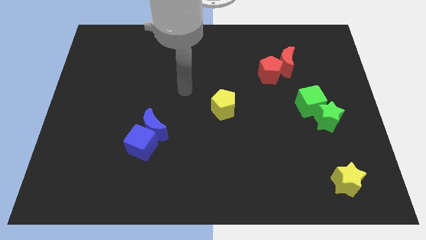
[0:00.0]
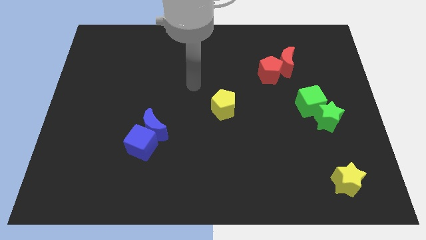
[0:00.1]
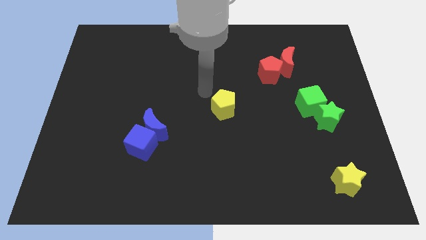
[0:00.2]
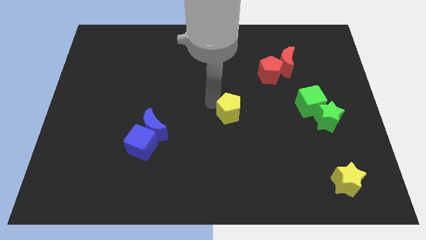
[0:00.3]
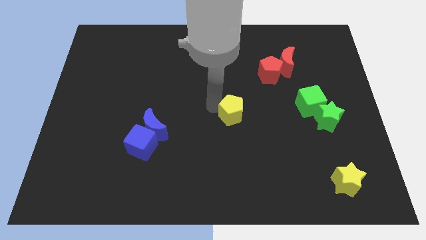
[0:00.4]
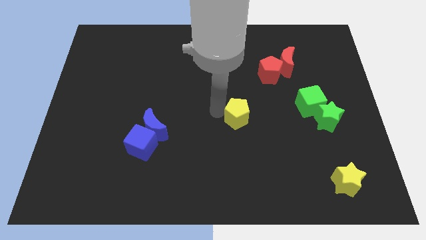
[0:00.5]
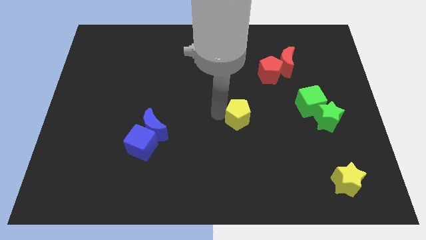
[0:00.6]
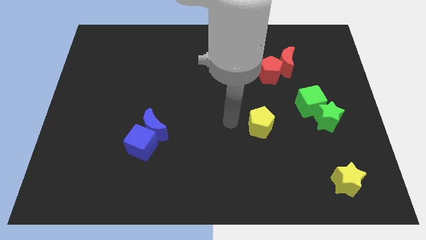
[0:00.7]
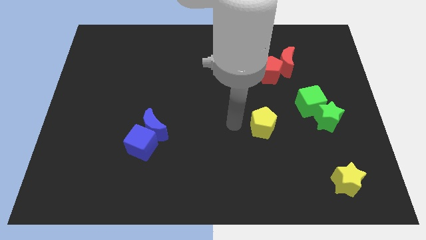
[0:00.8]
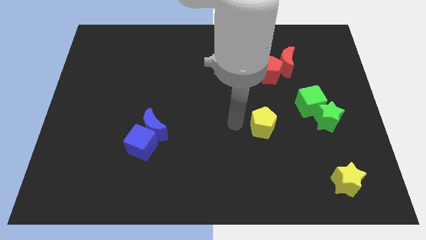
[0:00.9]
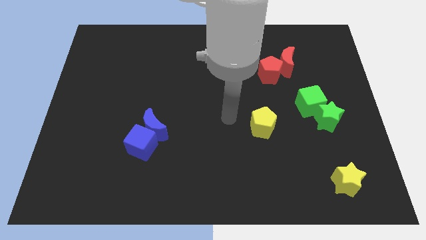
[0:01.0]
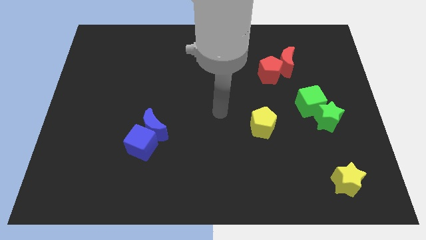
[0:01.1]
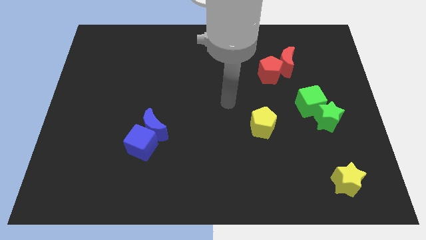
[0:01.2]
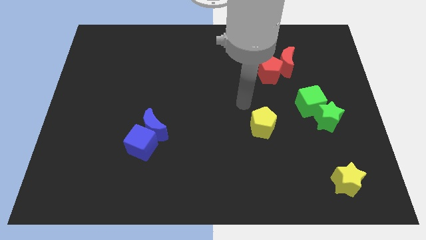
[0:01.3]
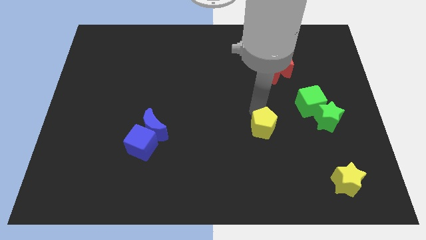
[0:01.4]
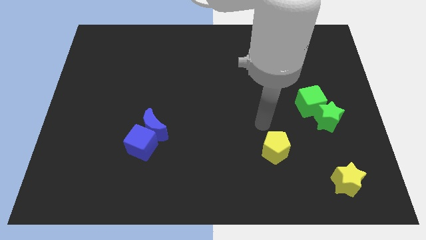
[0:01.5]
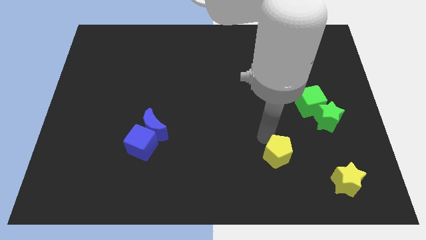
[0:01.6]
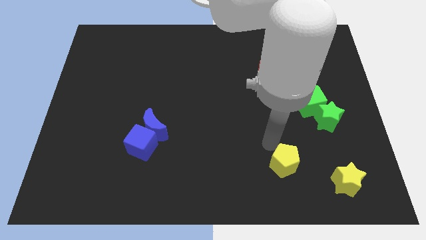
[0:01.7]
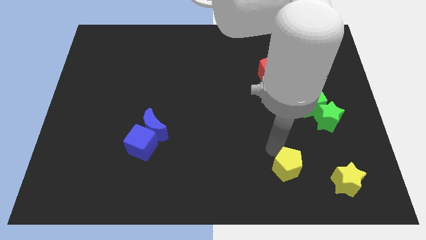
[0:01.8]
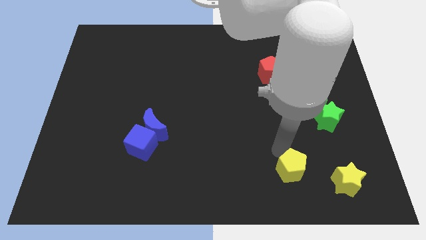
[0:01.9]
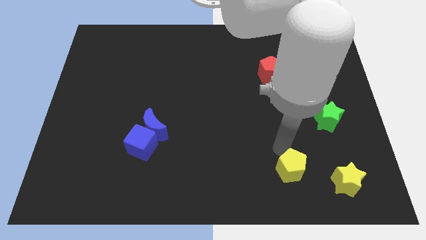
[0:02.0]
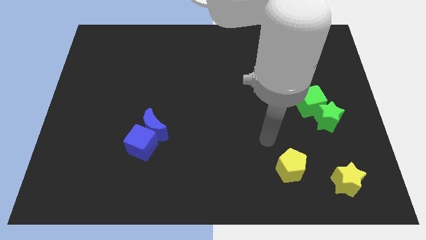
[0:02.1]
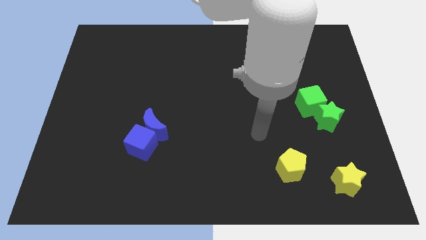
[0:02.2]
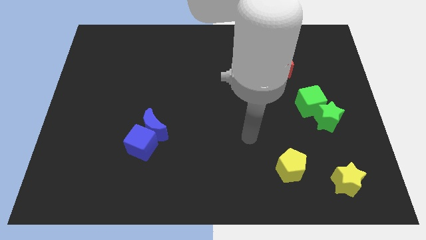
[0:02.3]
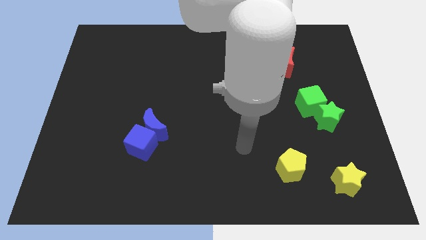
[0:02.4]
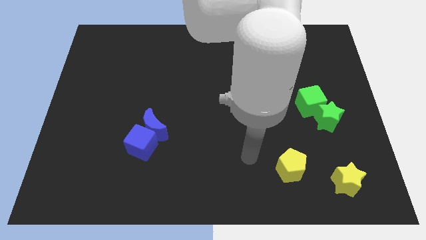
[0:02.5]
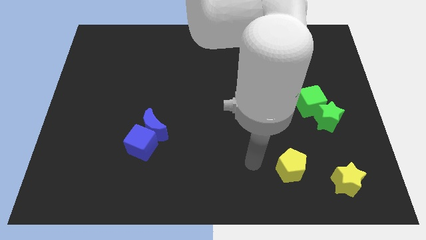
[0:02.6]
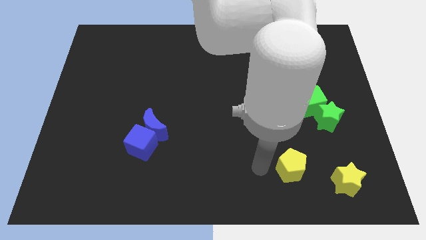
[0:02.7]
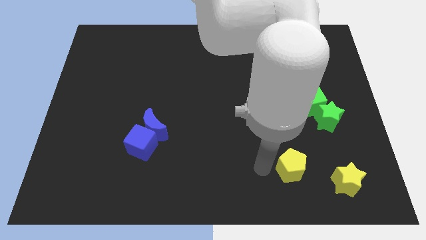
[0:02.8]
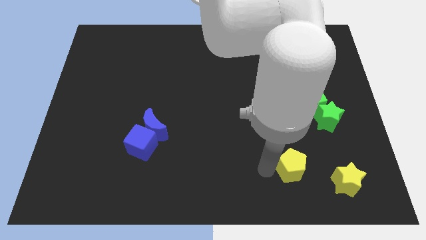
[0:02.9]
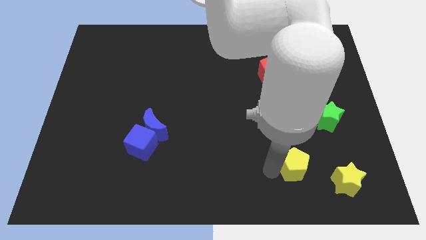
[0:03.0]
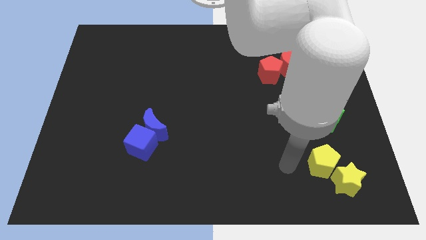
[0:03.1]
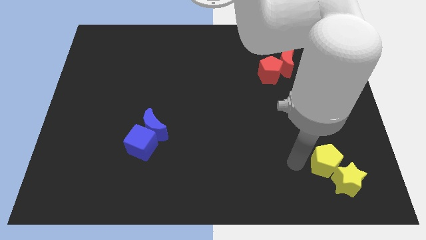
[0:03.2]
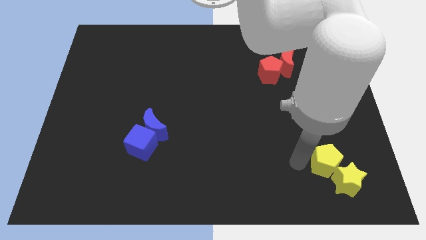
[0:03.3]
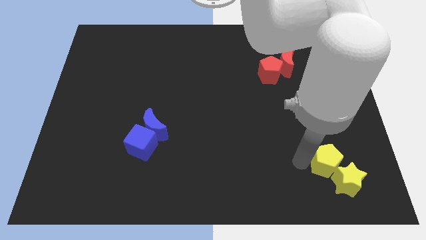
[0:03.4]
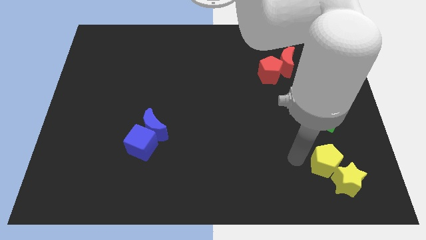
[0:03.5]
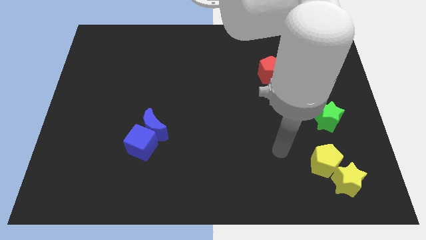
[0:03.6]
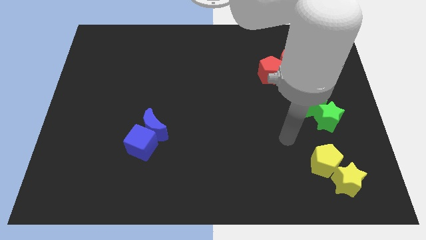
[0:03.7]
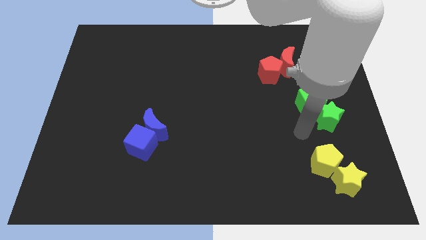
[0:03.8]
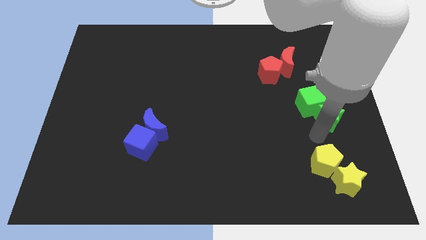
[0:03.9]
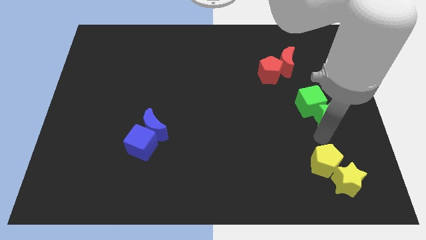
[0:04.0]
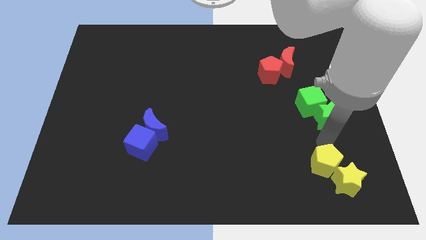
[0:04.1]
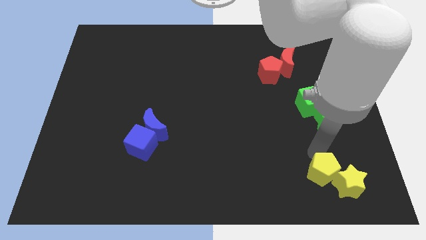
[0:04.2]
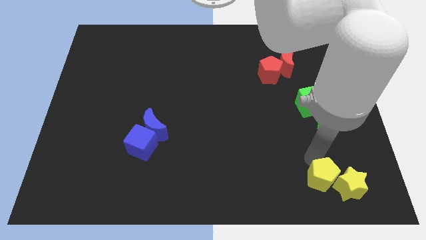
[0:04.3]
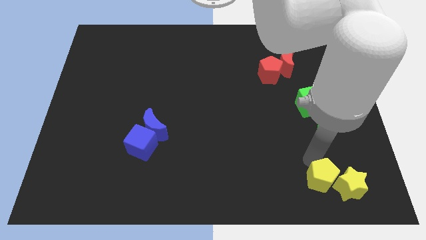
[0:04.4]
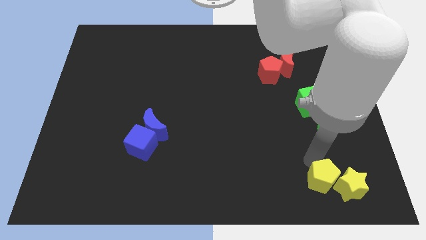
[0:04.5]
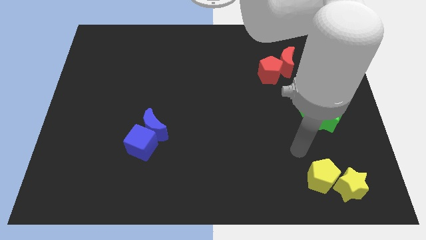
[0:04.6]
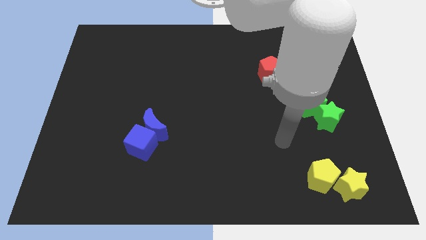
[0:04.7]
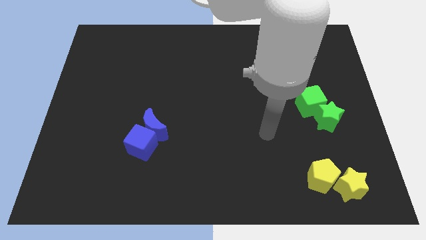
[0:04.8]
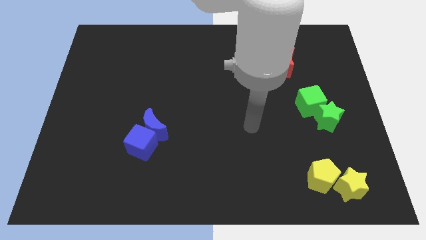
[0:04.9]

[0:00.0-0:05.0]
push the yellow pentagon into the yellow star

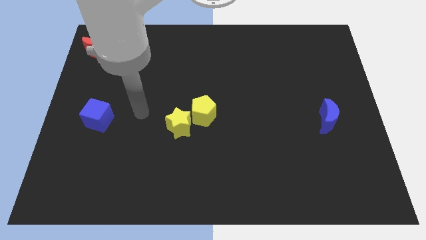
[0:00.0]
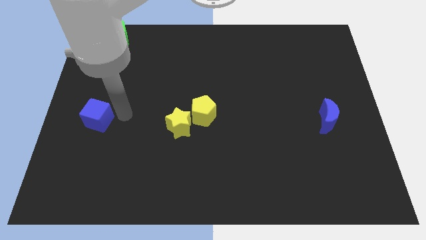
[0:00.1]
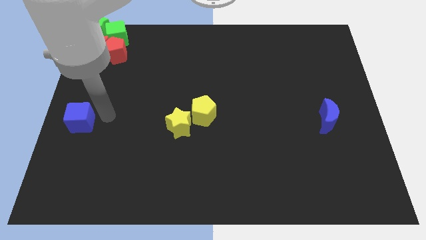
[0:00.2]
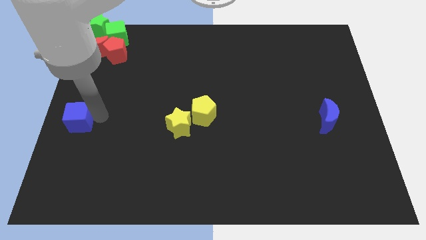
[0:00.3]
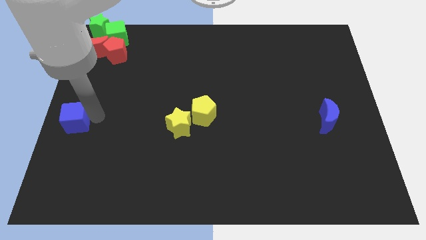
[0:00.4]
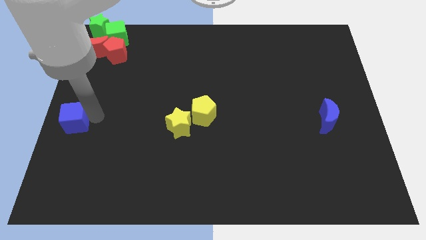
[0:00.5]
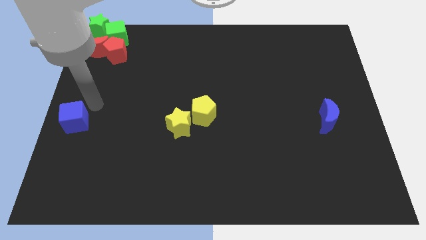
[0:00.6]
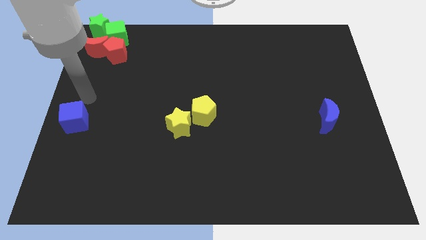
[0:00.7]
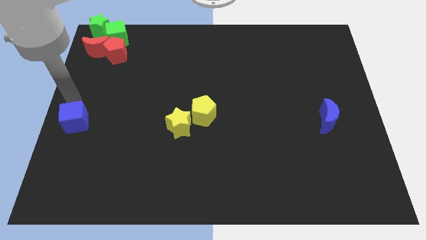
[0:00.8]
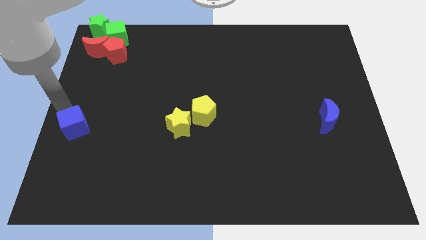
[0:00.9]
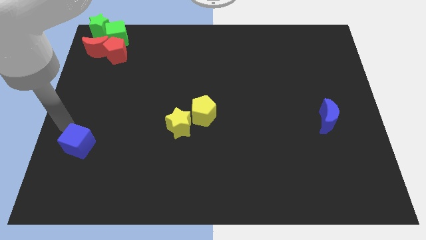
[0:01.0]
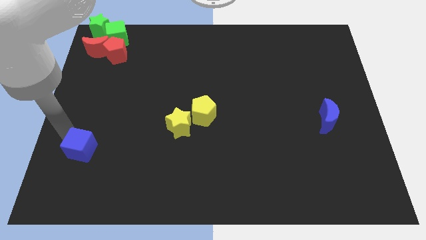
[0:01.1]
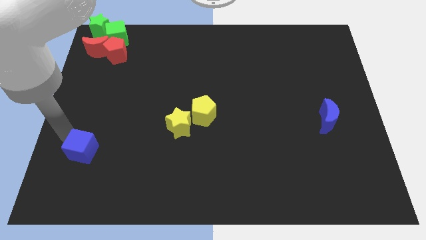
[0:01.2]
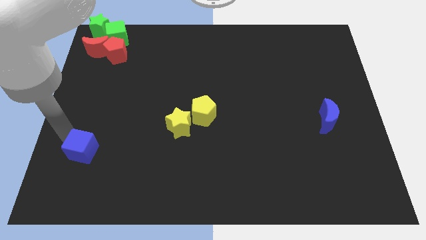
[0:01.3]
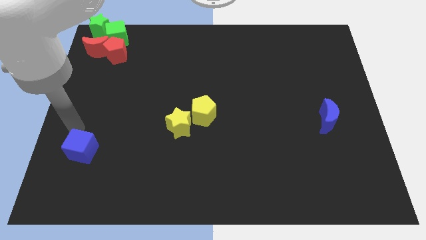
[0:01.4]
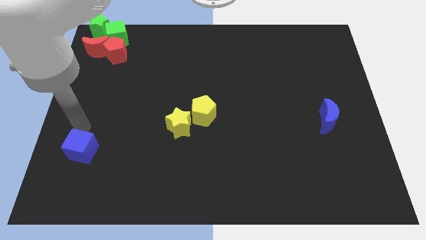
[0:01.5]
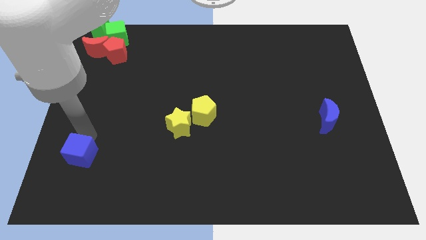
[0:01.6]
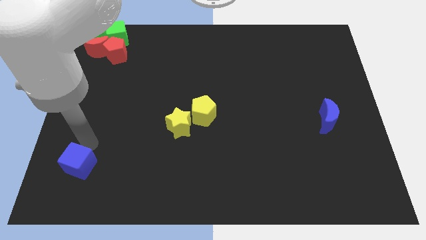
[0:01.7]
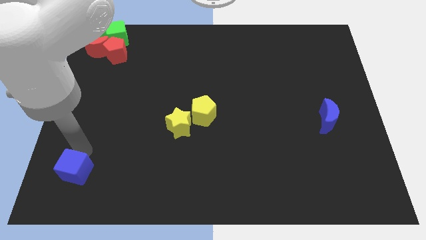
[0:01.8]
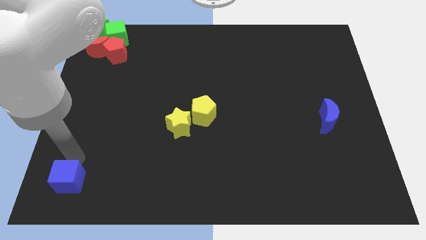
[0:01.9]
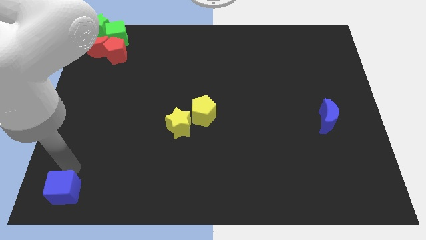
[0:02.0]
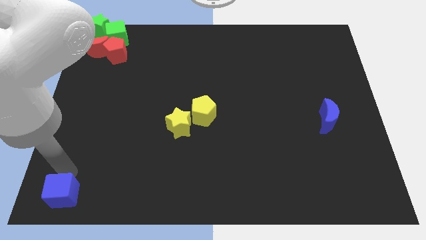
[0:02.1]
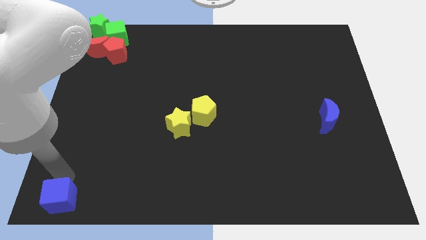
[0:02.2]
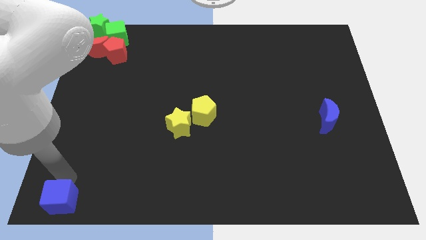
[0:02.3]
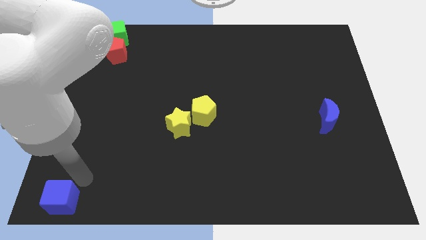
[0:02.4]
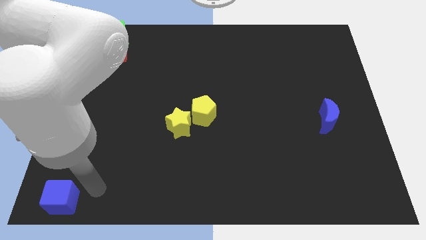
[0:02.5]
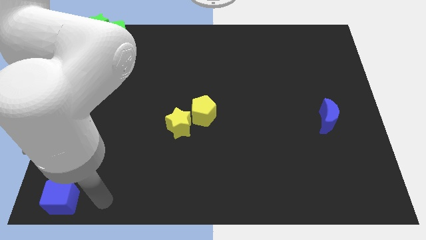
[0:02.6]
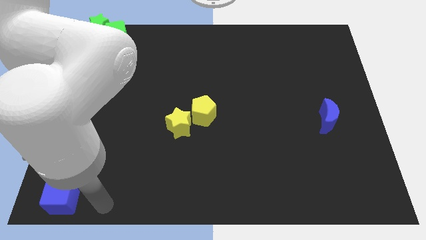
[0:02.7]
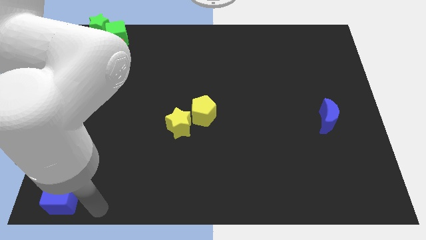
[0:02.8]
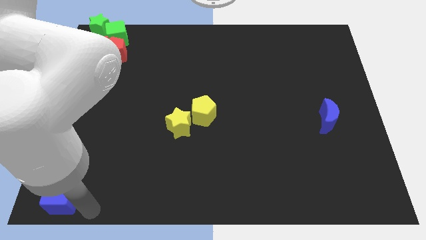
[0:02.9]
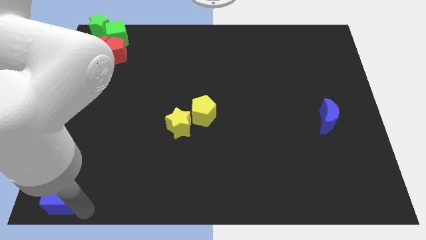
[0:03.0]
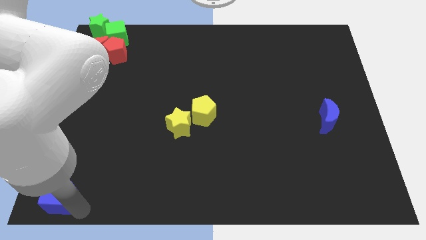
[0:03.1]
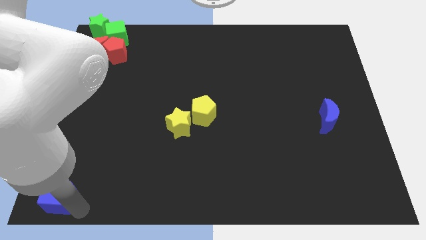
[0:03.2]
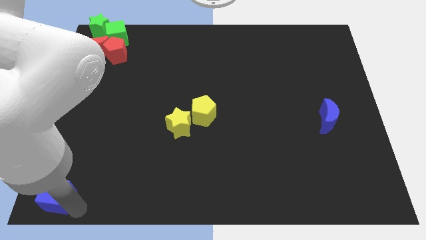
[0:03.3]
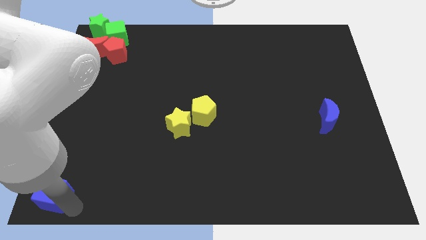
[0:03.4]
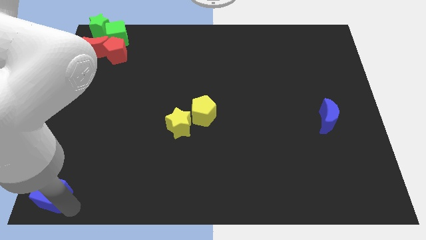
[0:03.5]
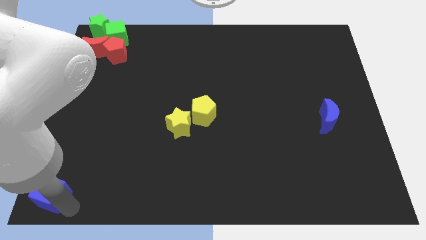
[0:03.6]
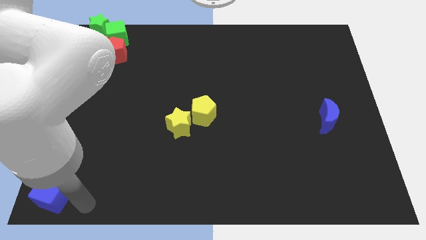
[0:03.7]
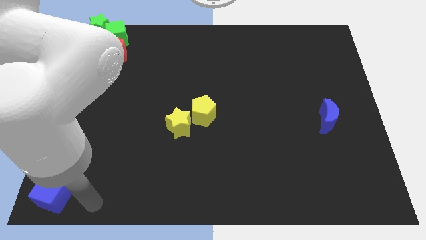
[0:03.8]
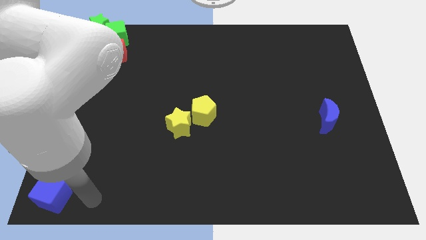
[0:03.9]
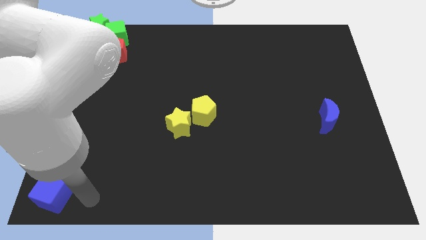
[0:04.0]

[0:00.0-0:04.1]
place blue cube at the bottom left
